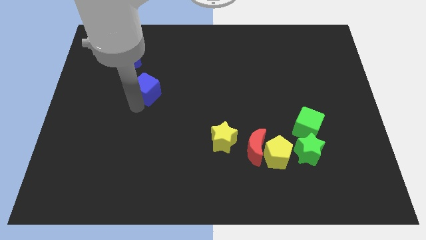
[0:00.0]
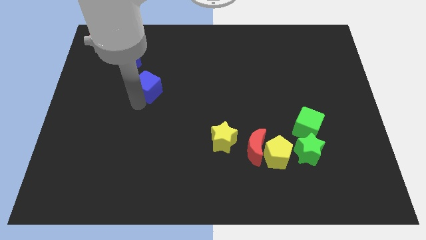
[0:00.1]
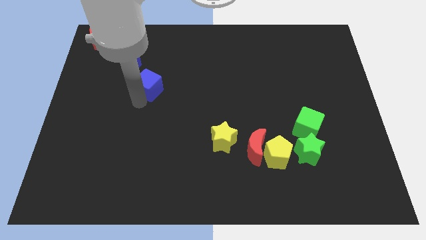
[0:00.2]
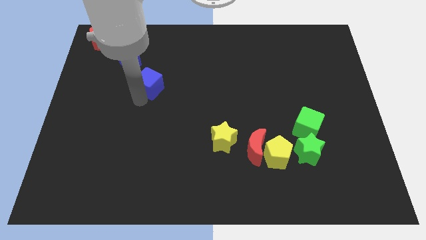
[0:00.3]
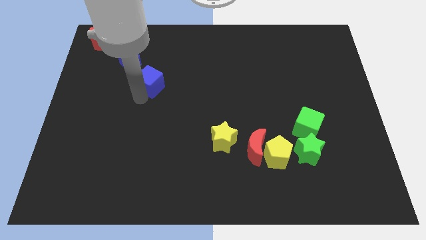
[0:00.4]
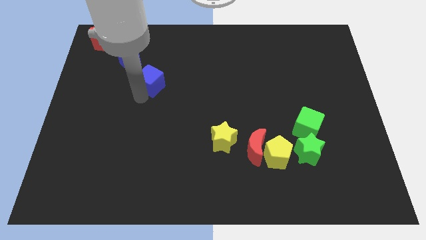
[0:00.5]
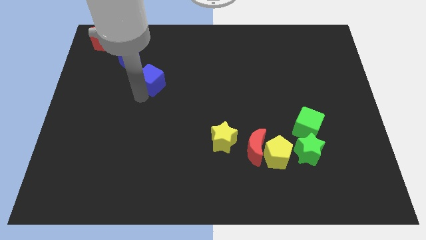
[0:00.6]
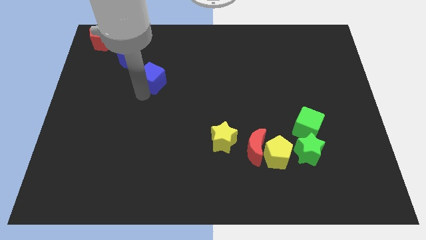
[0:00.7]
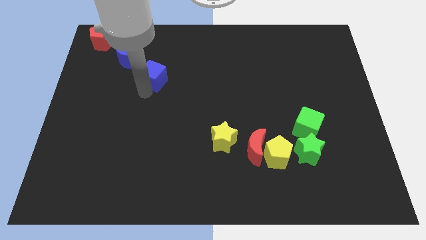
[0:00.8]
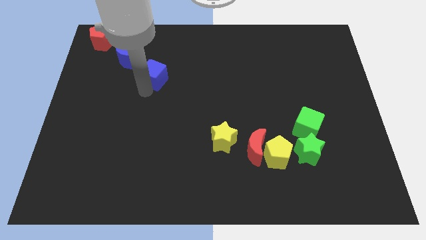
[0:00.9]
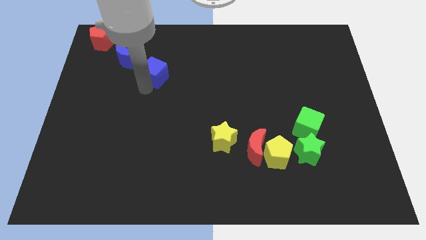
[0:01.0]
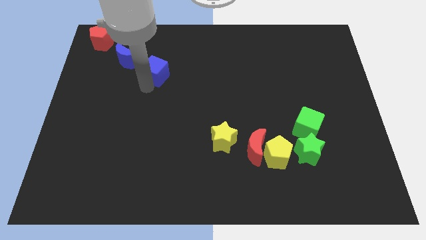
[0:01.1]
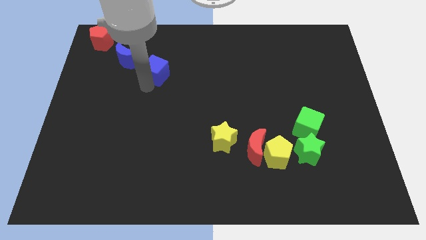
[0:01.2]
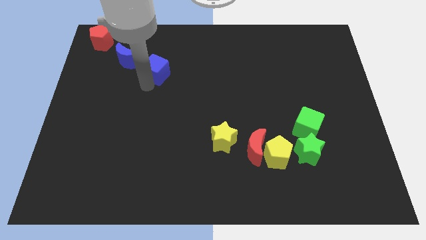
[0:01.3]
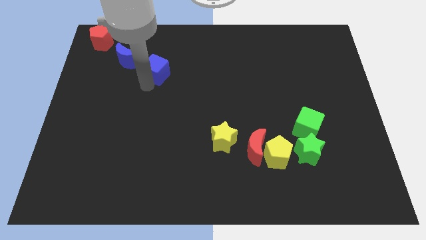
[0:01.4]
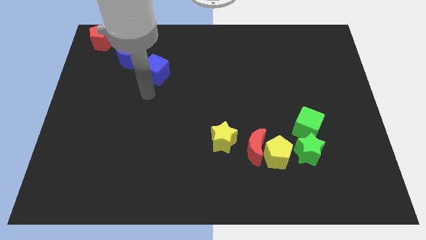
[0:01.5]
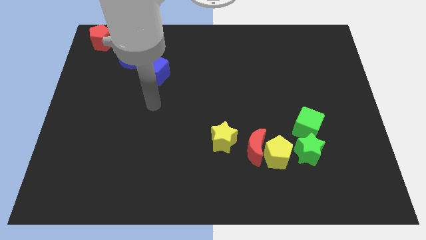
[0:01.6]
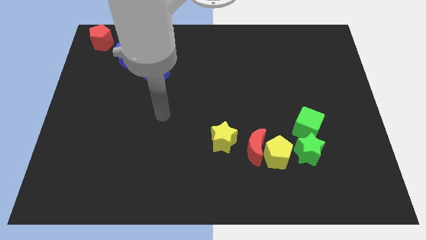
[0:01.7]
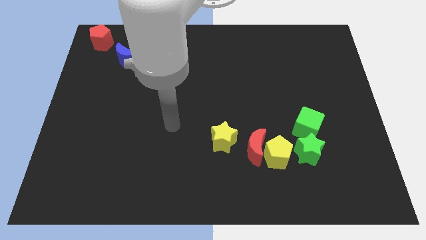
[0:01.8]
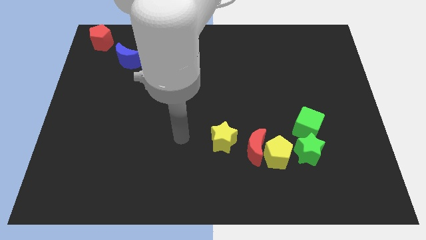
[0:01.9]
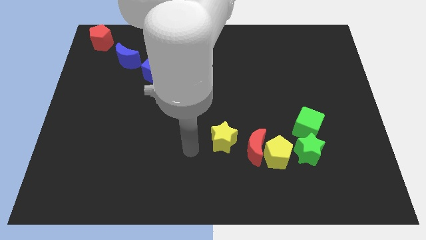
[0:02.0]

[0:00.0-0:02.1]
push the blue cube to the right side of the blue crescent

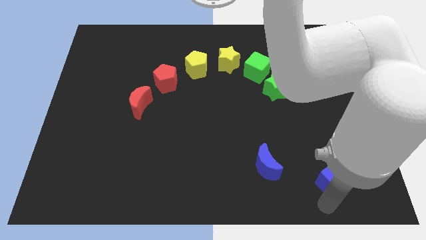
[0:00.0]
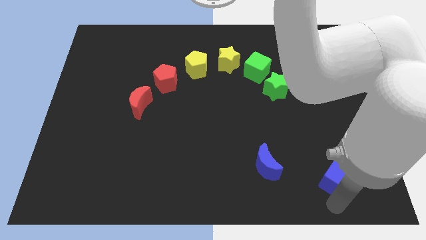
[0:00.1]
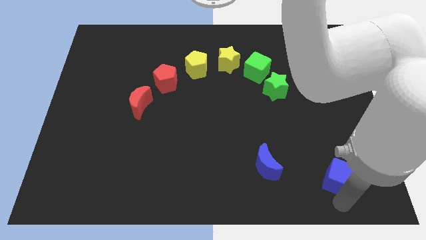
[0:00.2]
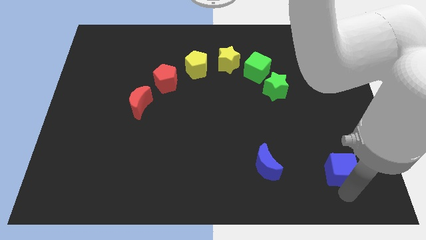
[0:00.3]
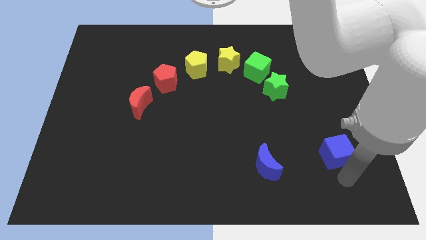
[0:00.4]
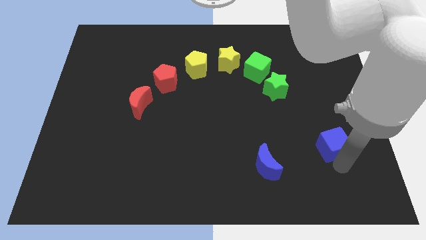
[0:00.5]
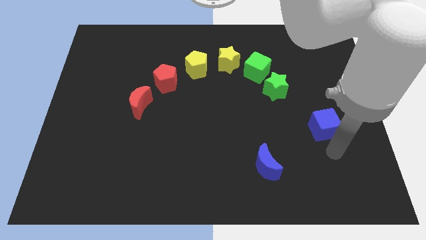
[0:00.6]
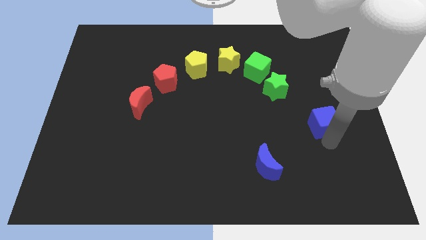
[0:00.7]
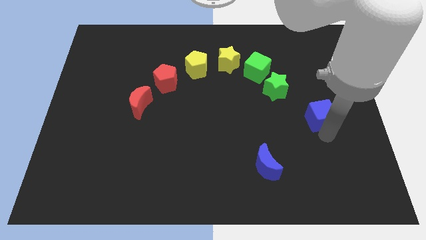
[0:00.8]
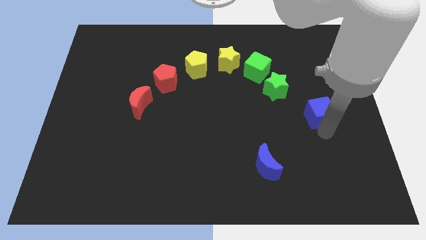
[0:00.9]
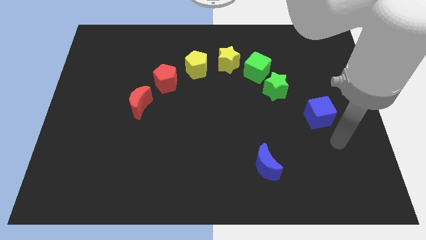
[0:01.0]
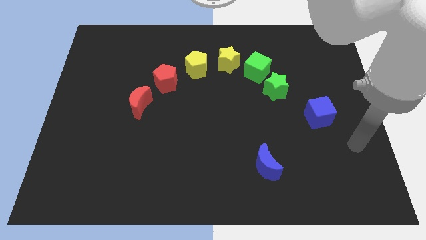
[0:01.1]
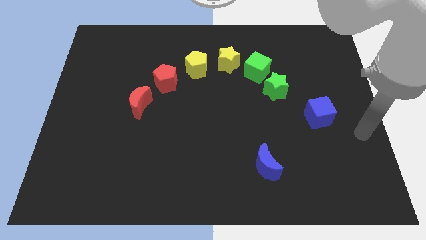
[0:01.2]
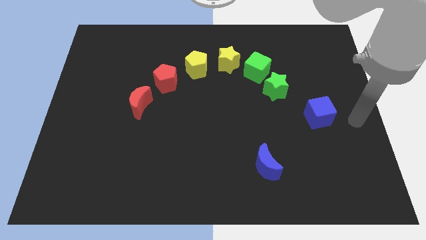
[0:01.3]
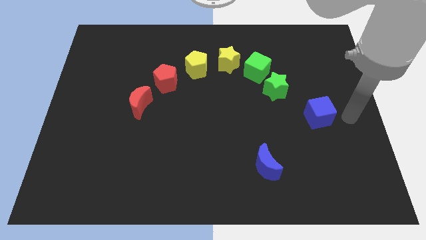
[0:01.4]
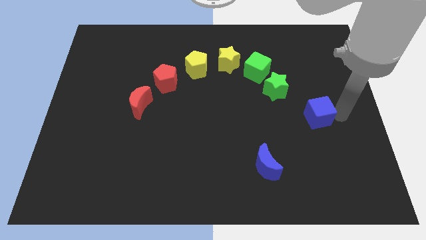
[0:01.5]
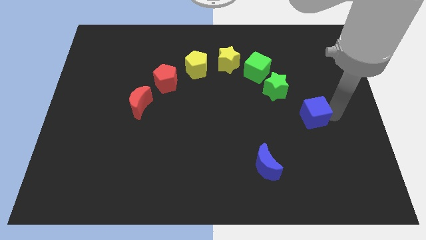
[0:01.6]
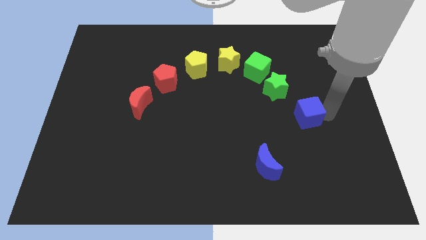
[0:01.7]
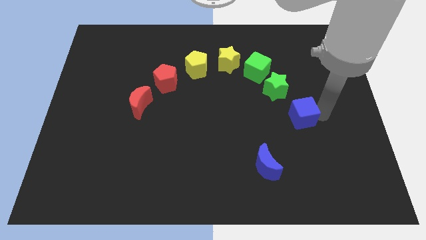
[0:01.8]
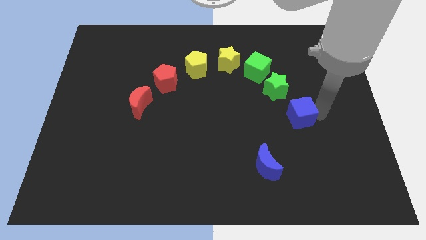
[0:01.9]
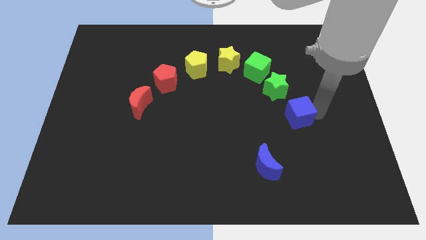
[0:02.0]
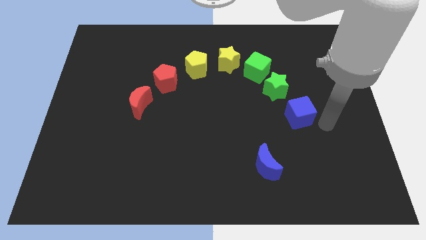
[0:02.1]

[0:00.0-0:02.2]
push the blue cube to the bottom right of the green star

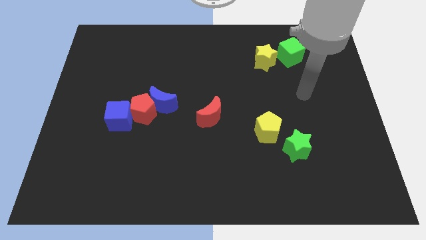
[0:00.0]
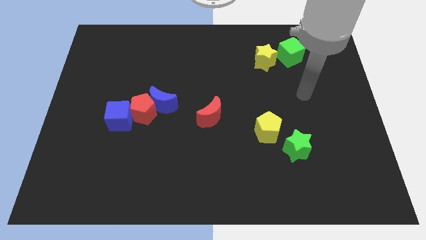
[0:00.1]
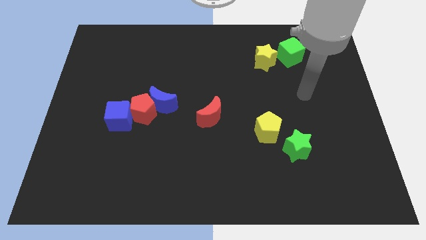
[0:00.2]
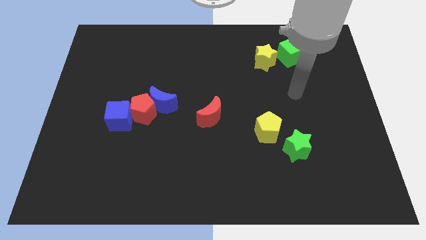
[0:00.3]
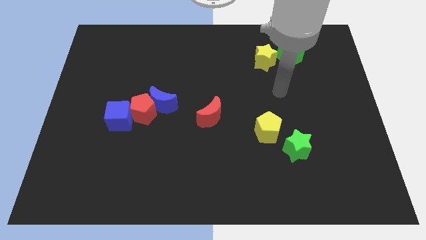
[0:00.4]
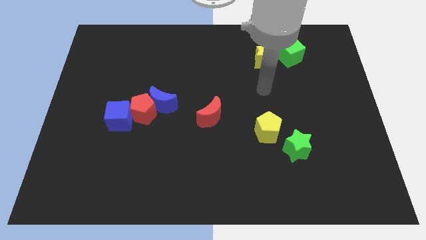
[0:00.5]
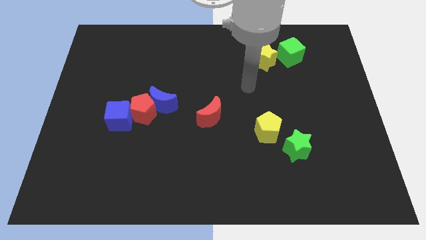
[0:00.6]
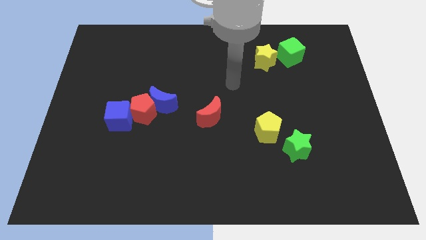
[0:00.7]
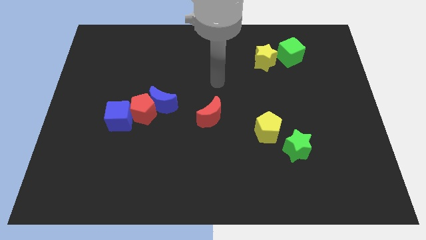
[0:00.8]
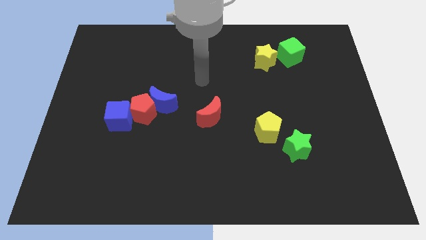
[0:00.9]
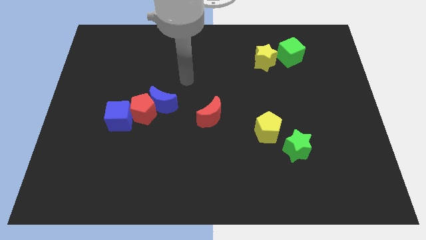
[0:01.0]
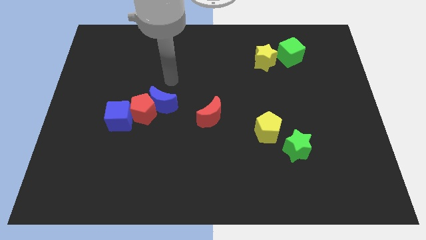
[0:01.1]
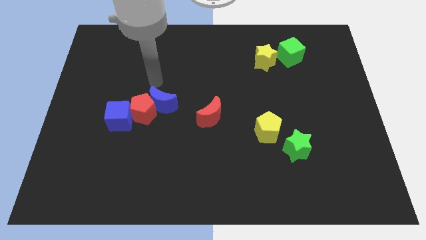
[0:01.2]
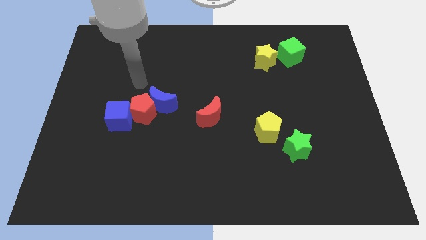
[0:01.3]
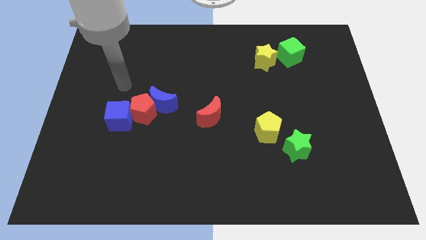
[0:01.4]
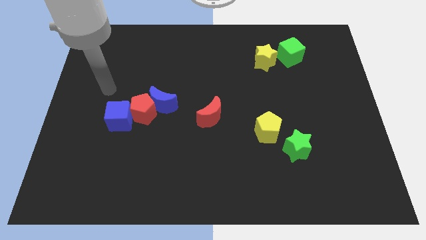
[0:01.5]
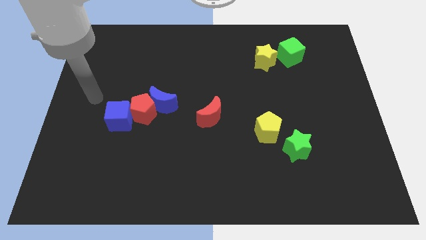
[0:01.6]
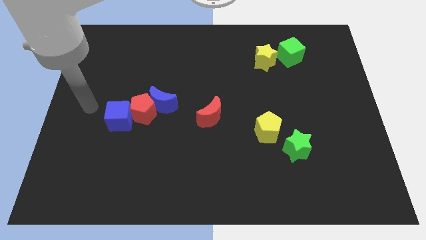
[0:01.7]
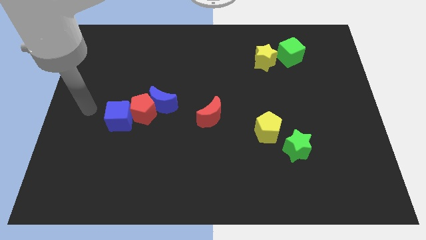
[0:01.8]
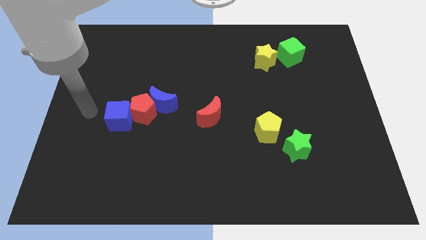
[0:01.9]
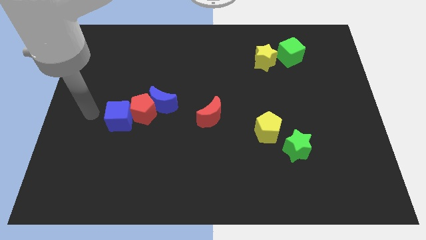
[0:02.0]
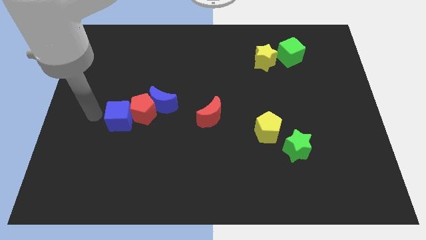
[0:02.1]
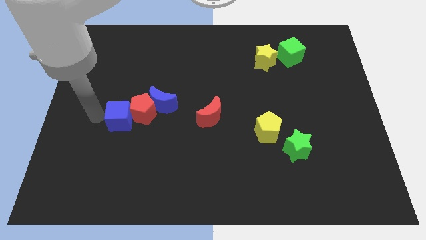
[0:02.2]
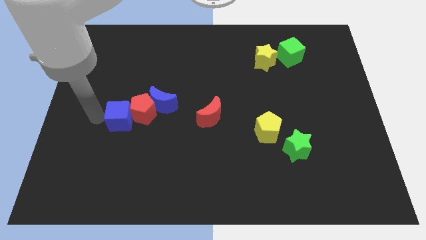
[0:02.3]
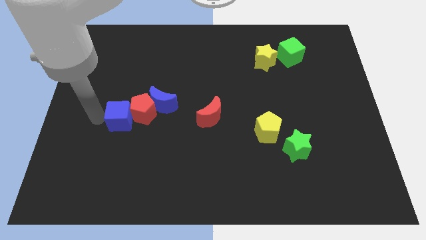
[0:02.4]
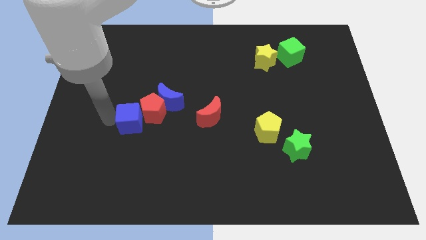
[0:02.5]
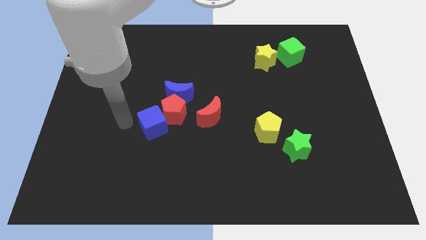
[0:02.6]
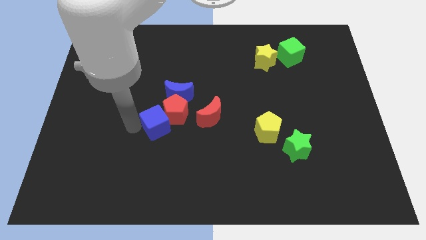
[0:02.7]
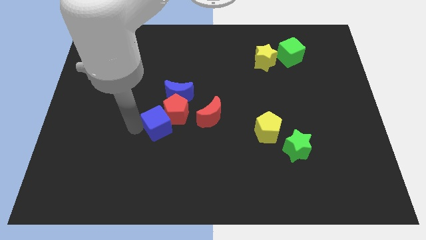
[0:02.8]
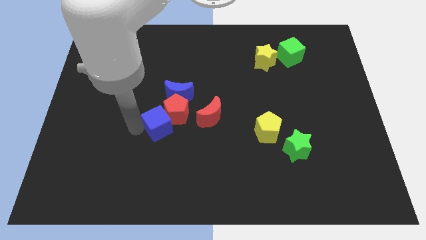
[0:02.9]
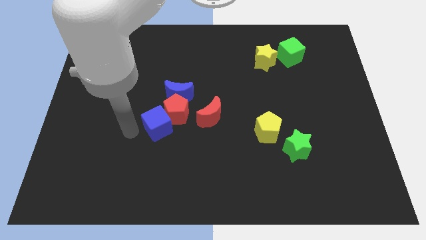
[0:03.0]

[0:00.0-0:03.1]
move the arm to the left of blue cube

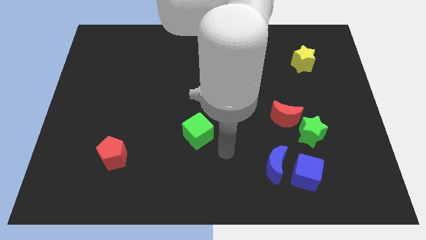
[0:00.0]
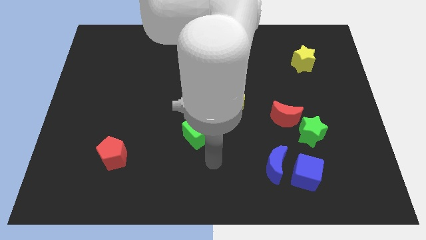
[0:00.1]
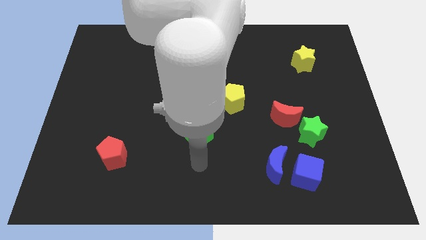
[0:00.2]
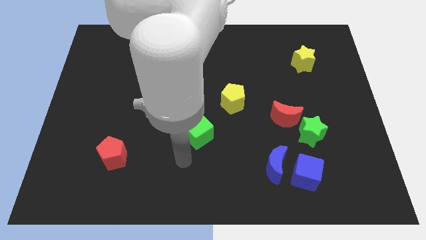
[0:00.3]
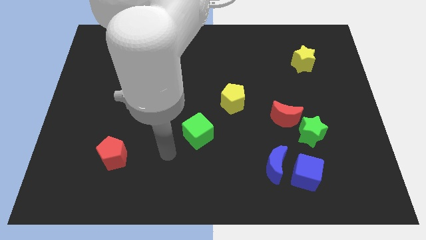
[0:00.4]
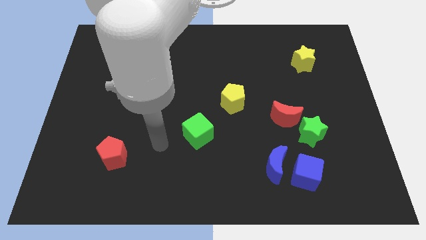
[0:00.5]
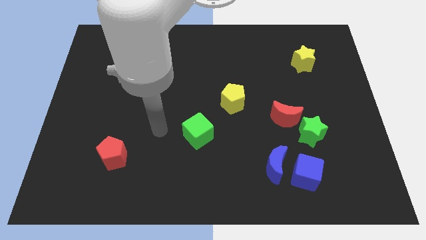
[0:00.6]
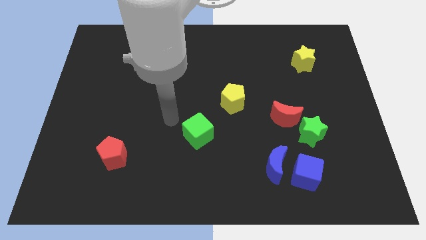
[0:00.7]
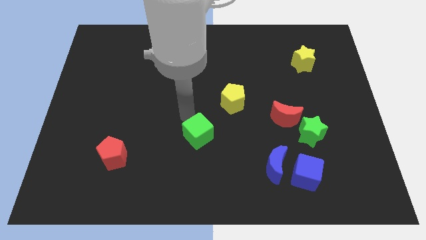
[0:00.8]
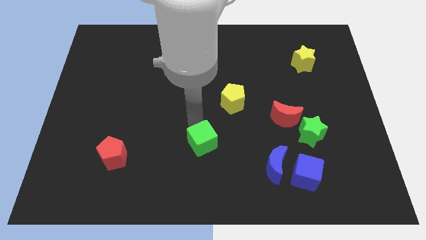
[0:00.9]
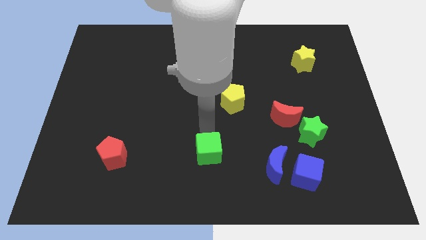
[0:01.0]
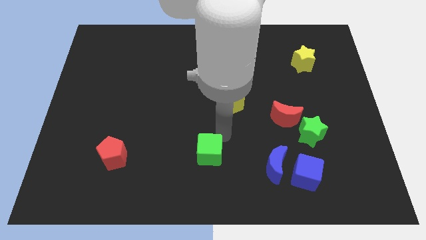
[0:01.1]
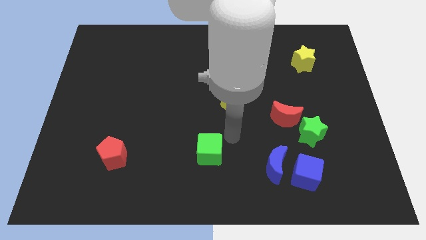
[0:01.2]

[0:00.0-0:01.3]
drag the green cube to the left of the blue moon

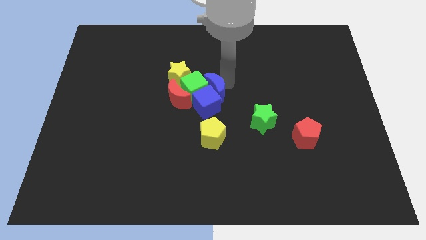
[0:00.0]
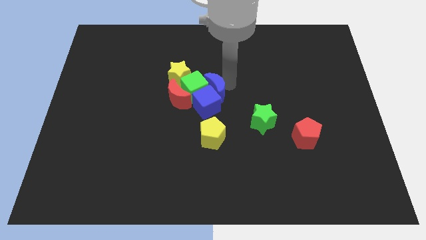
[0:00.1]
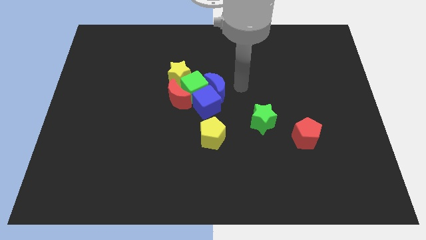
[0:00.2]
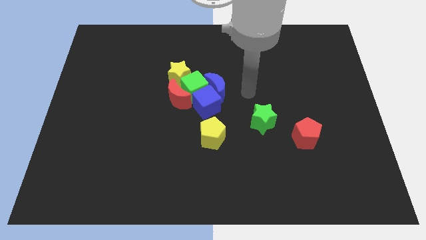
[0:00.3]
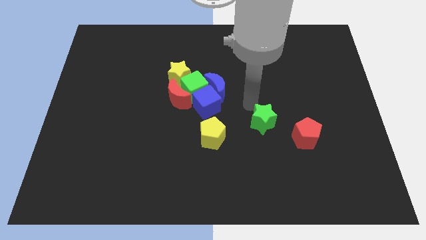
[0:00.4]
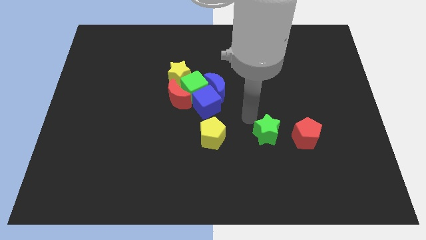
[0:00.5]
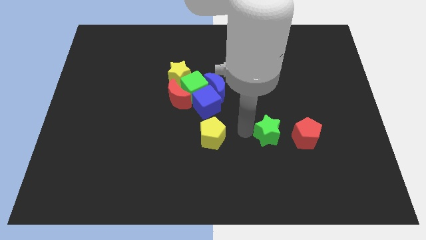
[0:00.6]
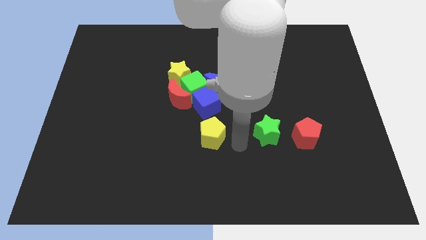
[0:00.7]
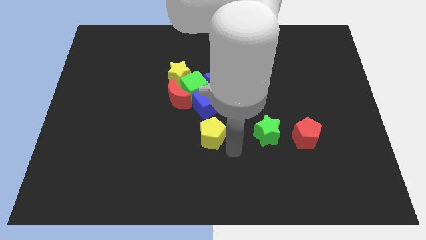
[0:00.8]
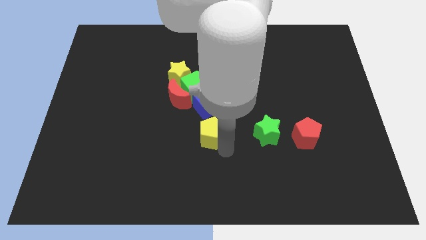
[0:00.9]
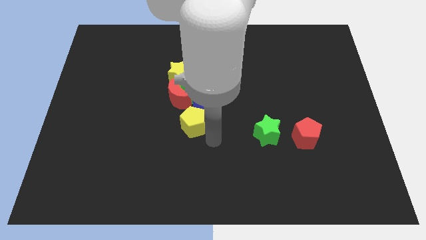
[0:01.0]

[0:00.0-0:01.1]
move away from the blue moon
